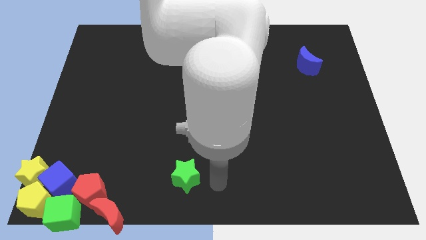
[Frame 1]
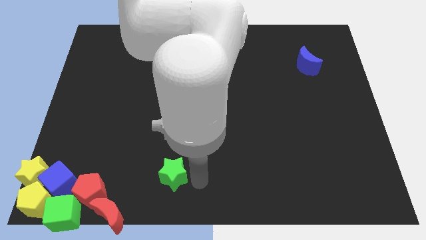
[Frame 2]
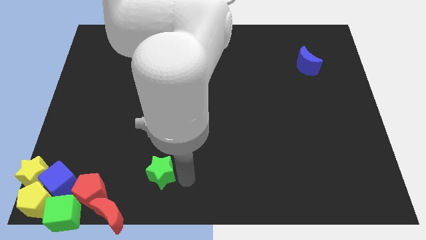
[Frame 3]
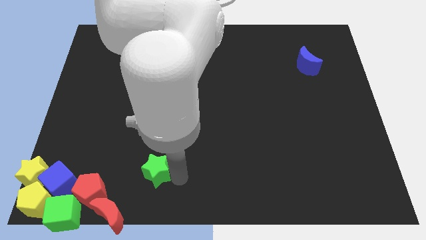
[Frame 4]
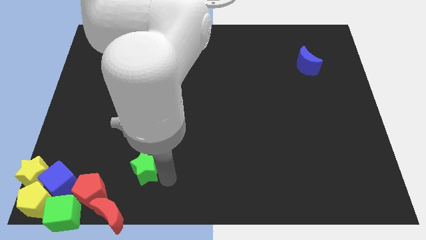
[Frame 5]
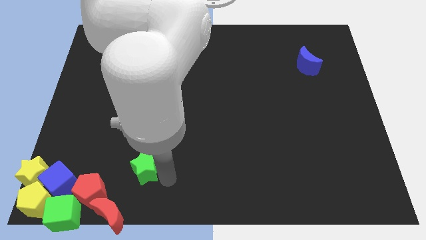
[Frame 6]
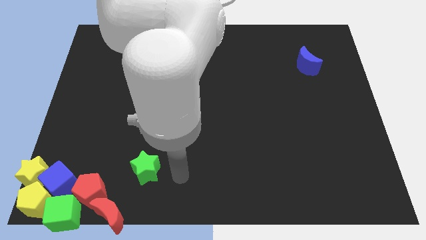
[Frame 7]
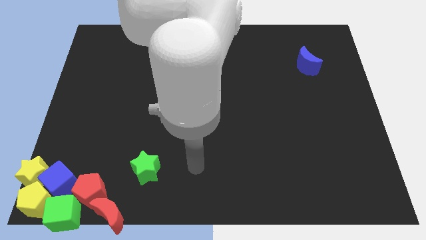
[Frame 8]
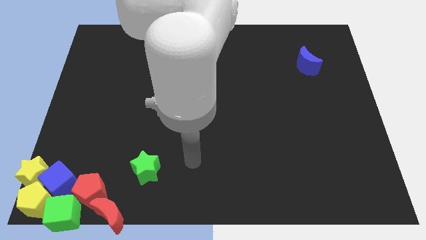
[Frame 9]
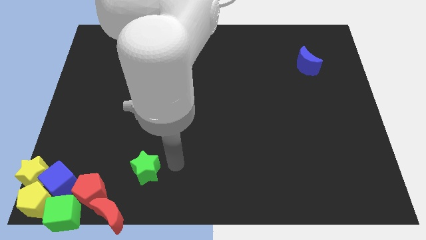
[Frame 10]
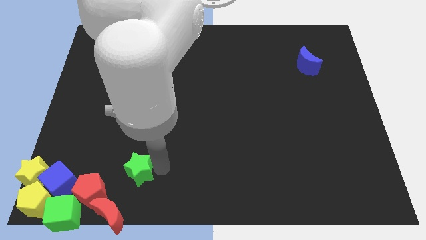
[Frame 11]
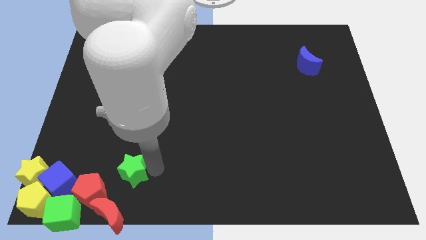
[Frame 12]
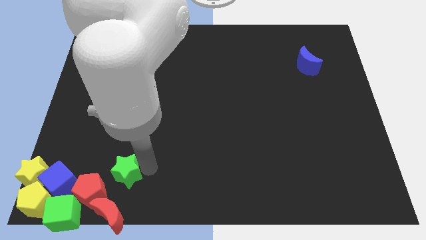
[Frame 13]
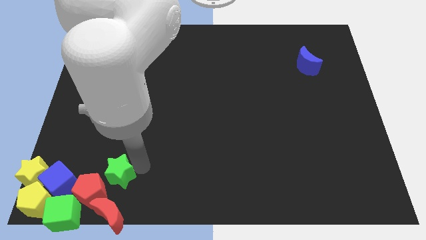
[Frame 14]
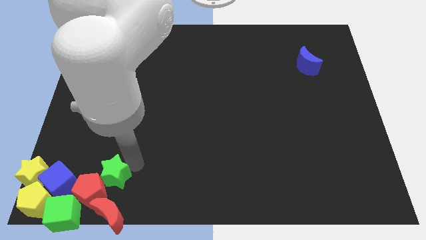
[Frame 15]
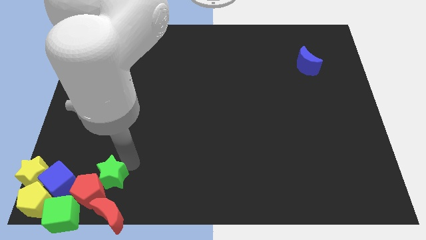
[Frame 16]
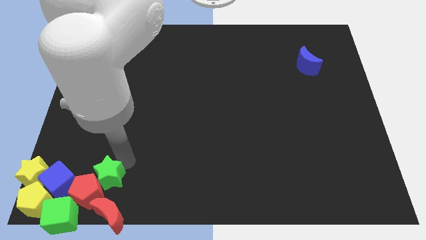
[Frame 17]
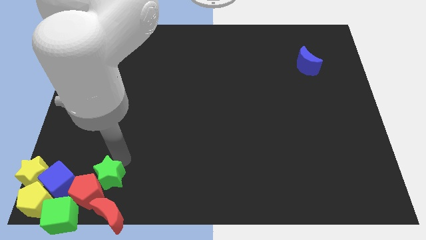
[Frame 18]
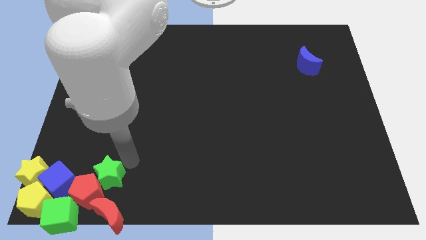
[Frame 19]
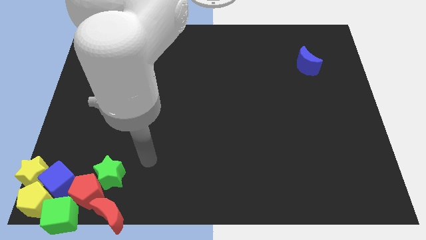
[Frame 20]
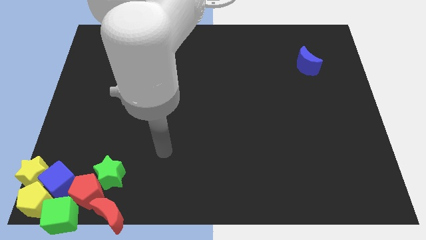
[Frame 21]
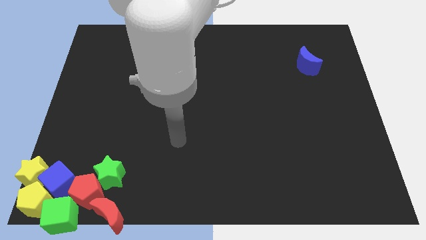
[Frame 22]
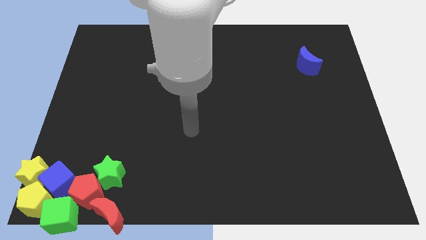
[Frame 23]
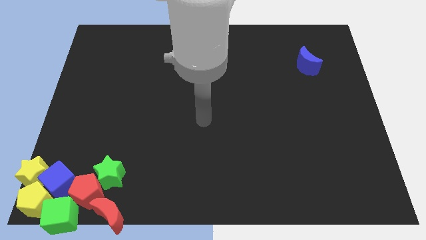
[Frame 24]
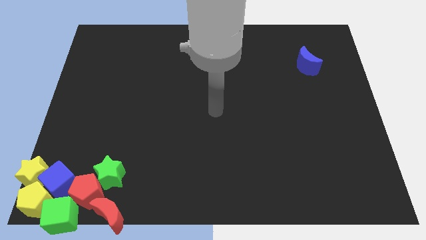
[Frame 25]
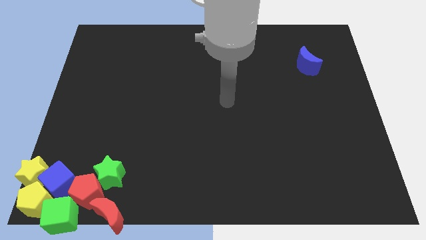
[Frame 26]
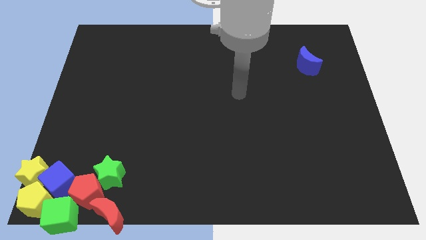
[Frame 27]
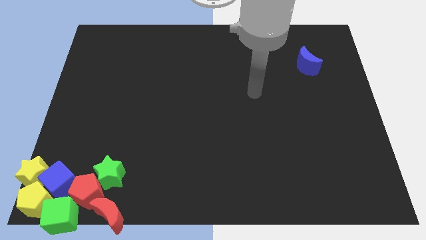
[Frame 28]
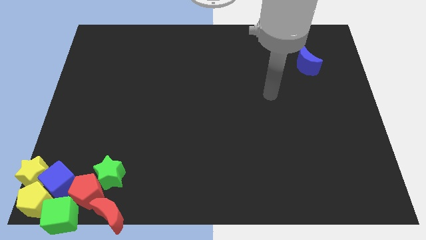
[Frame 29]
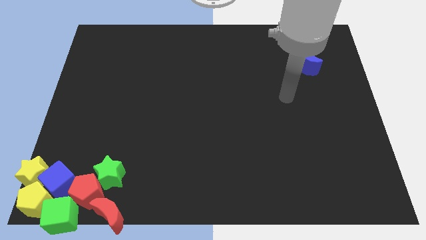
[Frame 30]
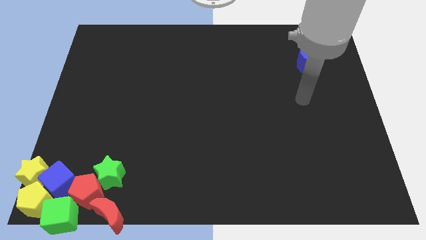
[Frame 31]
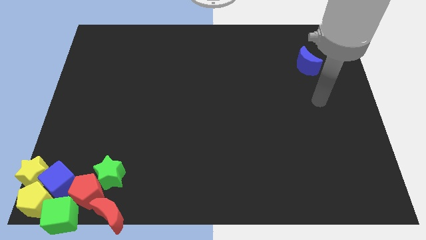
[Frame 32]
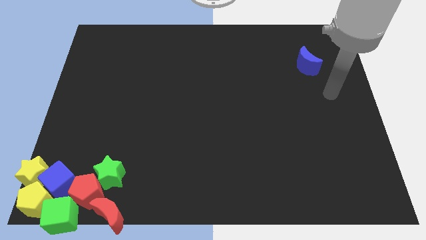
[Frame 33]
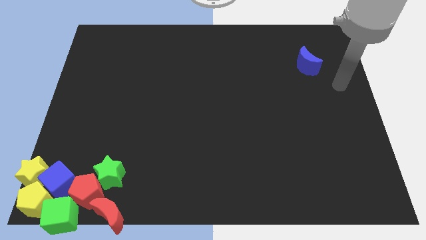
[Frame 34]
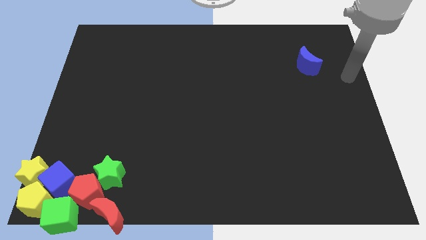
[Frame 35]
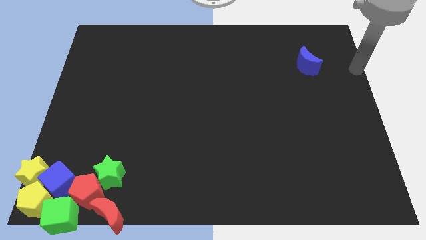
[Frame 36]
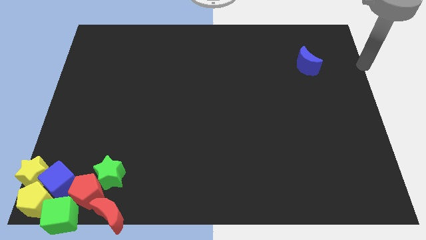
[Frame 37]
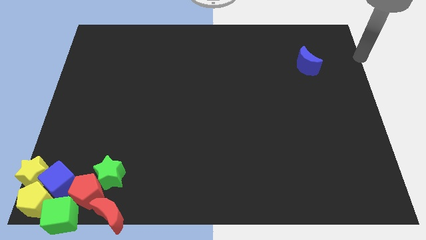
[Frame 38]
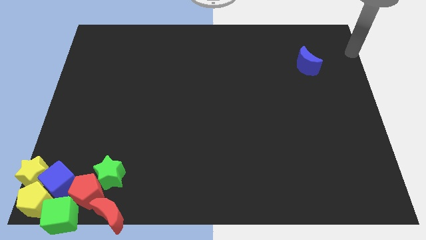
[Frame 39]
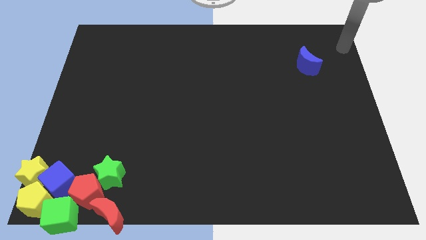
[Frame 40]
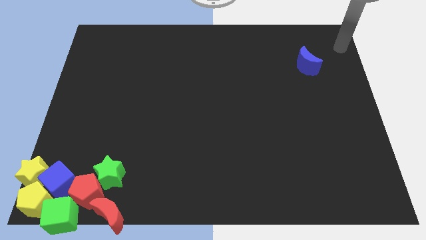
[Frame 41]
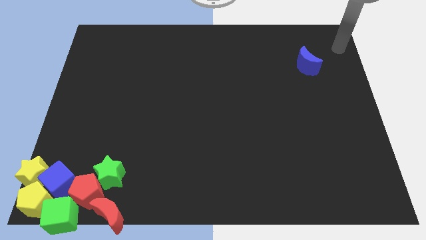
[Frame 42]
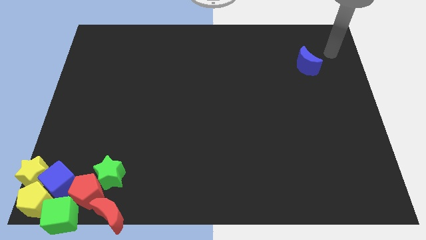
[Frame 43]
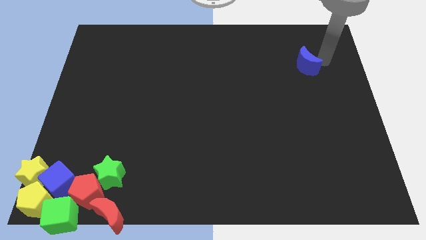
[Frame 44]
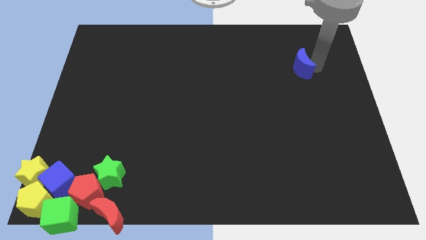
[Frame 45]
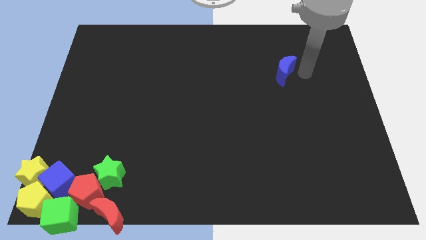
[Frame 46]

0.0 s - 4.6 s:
place the green star into the group of blocks

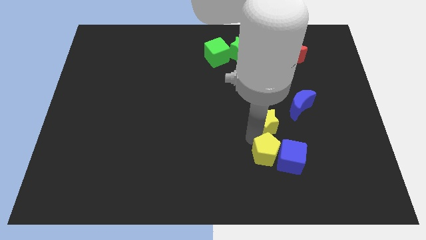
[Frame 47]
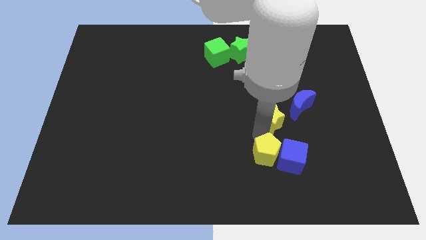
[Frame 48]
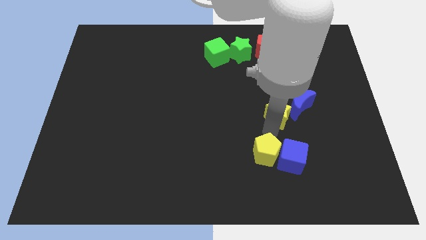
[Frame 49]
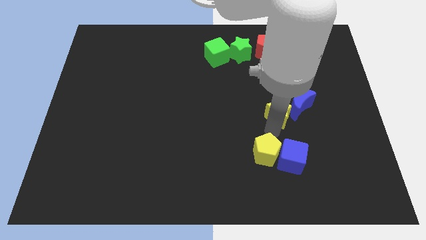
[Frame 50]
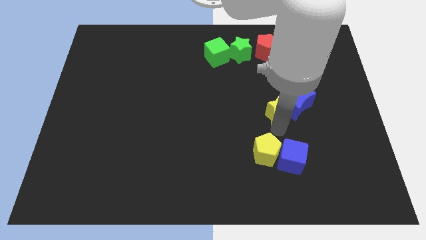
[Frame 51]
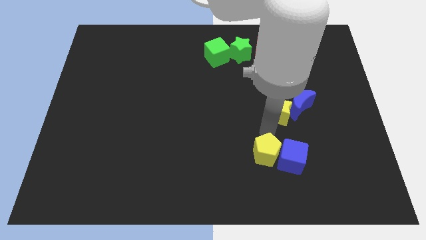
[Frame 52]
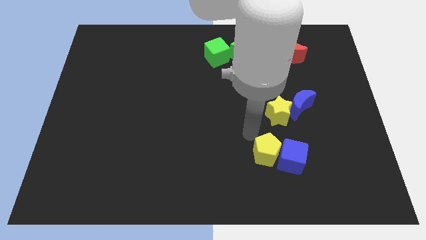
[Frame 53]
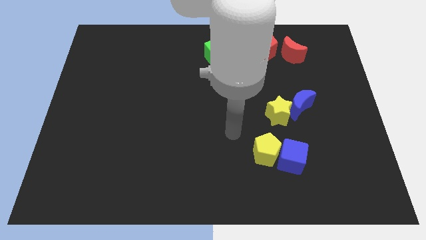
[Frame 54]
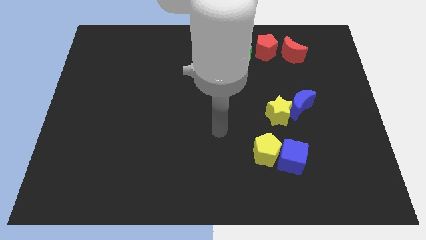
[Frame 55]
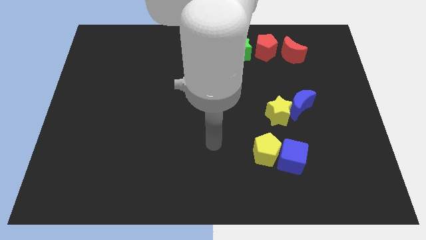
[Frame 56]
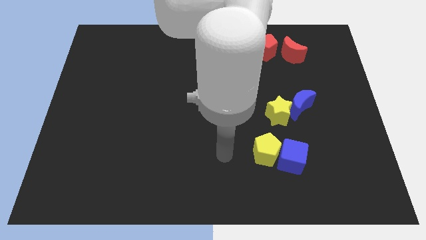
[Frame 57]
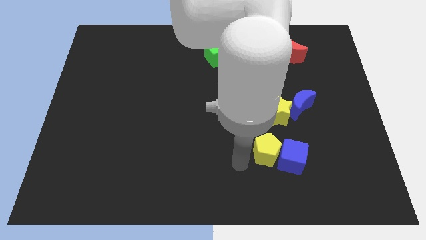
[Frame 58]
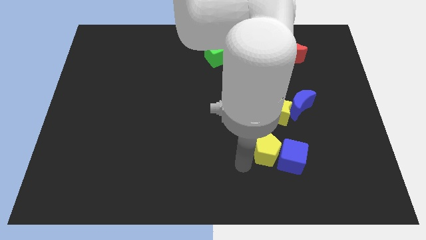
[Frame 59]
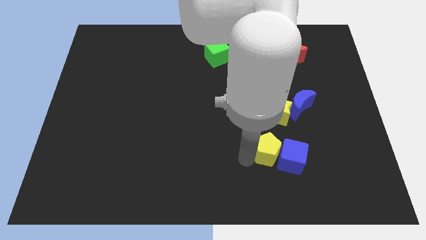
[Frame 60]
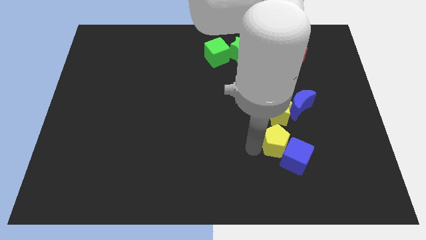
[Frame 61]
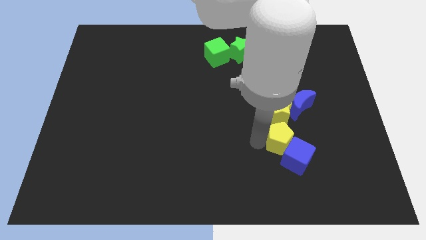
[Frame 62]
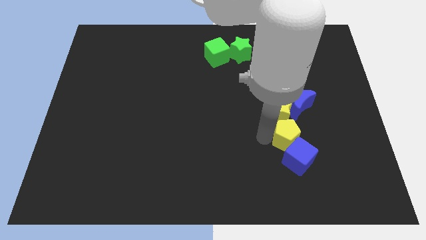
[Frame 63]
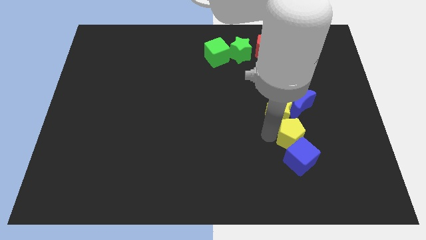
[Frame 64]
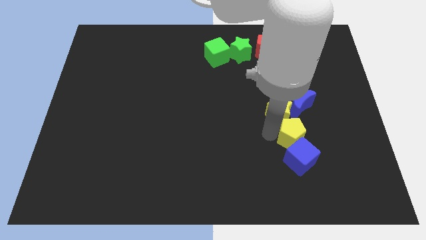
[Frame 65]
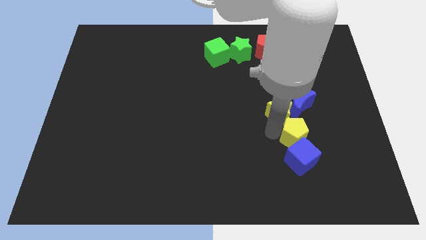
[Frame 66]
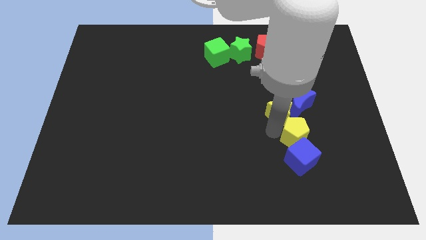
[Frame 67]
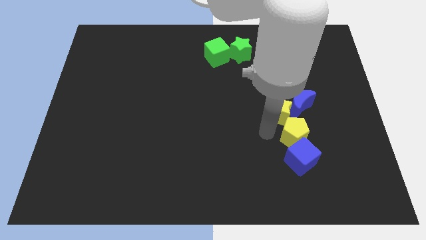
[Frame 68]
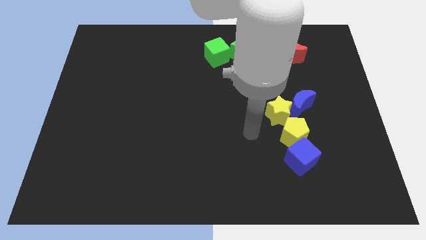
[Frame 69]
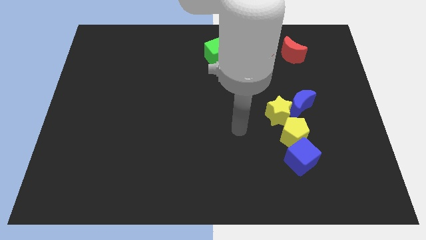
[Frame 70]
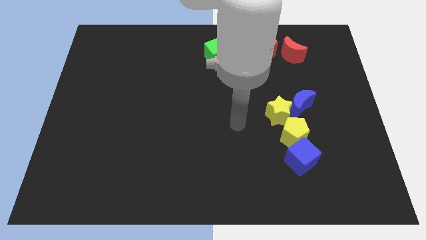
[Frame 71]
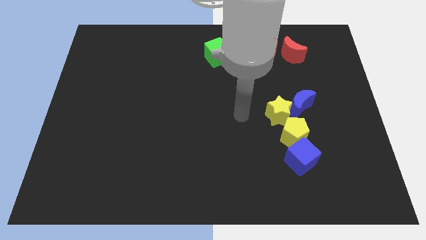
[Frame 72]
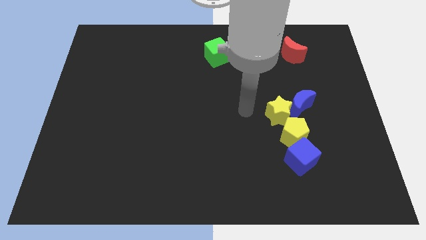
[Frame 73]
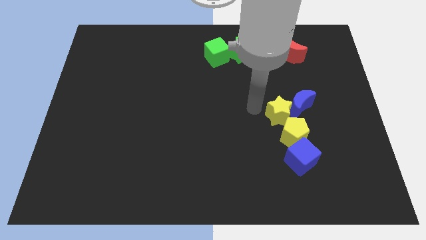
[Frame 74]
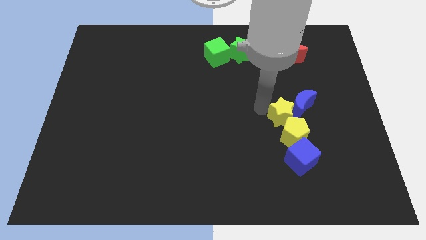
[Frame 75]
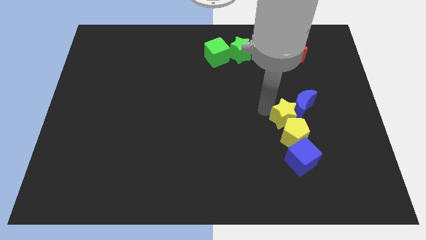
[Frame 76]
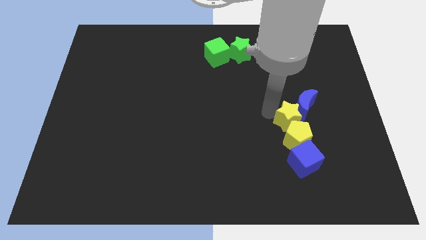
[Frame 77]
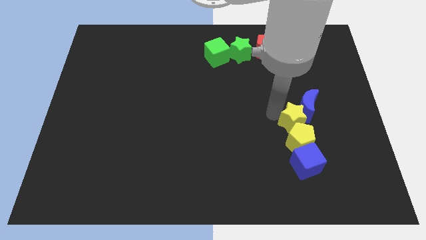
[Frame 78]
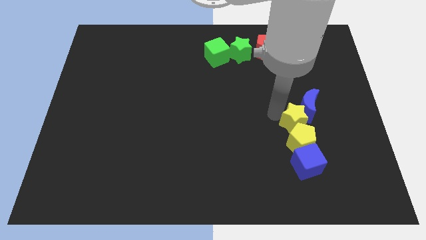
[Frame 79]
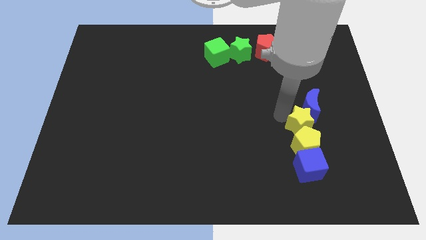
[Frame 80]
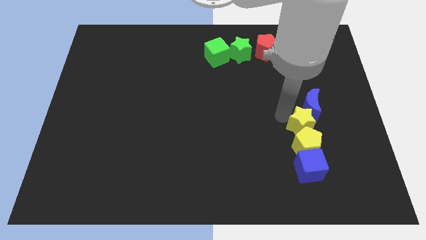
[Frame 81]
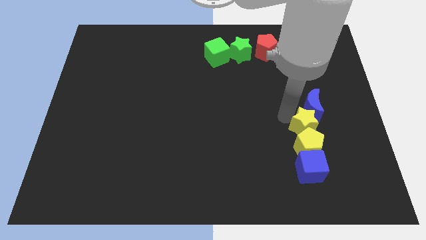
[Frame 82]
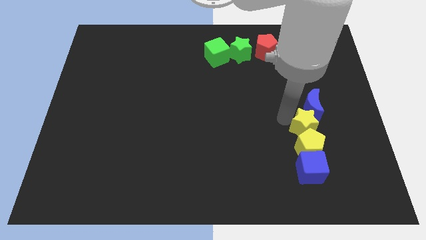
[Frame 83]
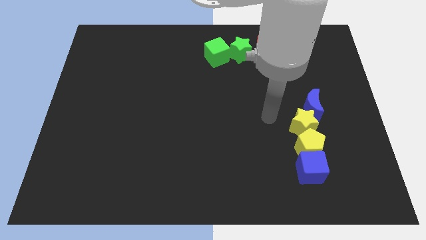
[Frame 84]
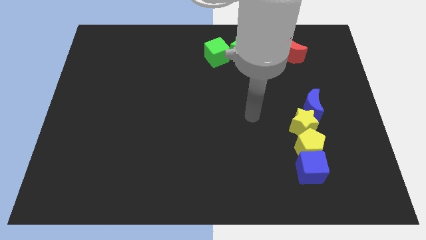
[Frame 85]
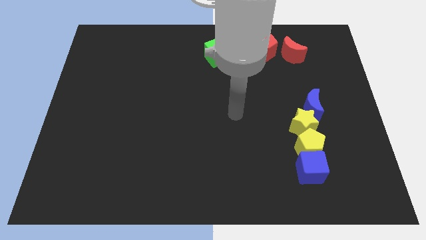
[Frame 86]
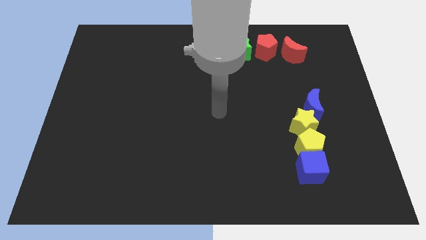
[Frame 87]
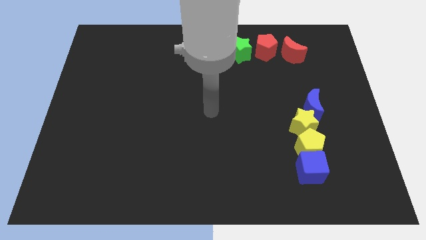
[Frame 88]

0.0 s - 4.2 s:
move the blue crescent cube and yellow star and pentagon in a straight row

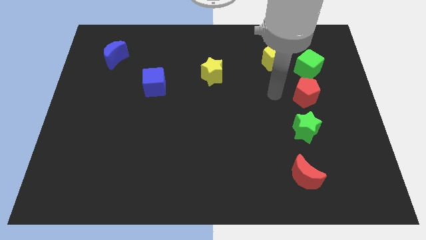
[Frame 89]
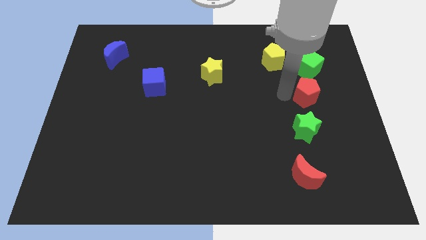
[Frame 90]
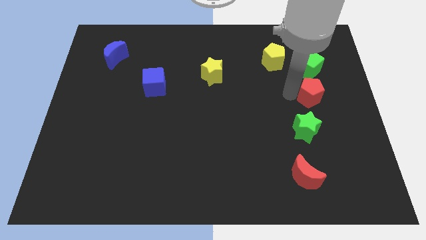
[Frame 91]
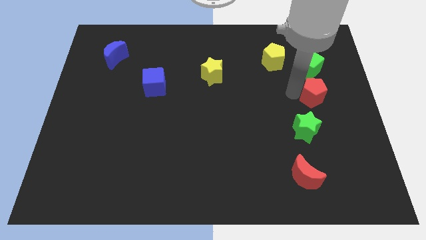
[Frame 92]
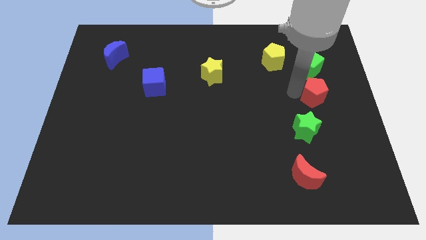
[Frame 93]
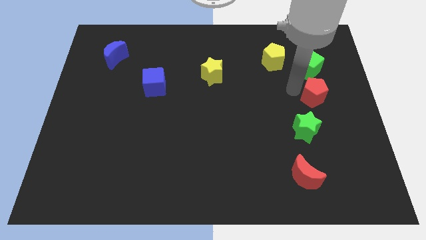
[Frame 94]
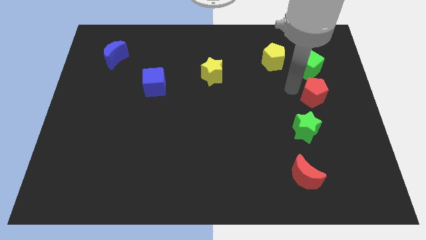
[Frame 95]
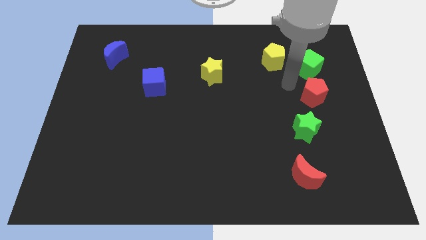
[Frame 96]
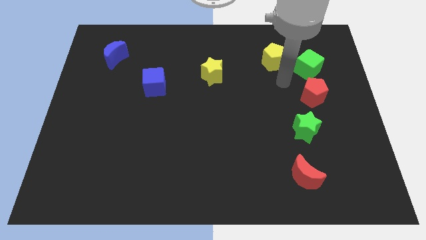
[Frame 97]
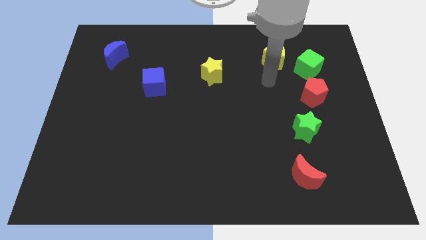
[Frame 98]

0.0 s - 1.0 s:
slightly push the red pentagon towards the right side of the board
